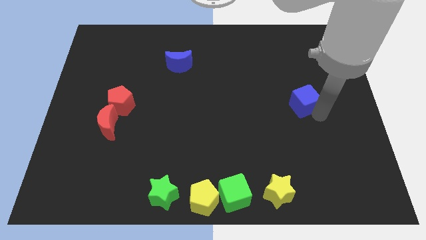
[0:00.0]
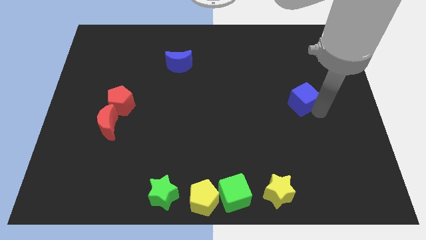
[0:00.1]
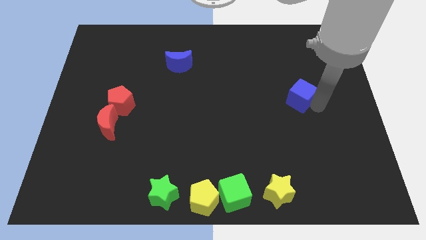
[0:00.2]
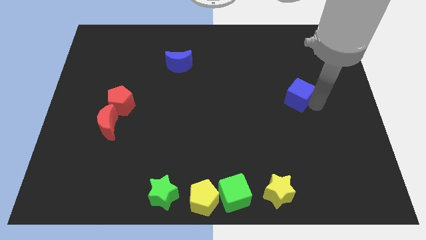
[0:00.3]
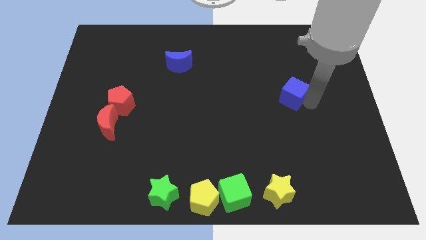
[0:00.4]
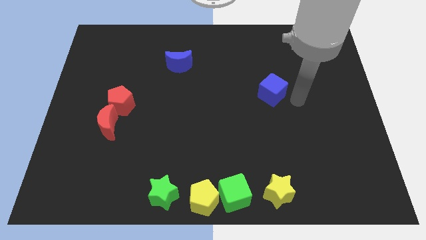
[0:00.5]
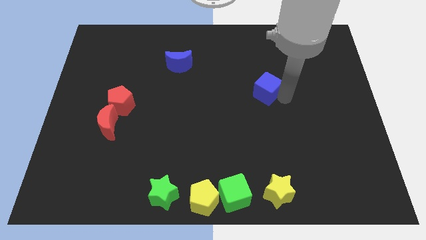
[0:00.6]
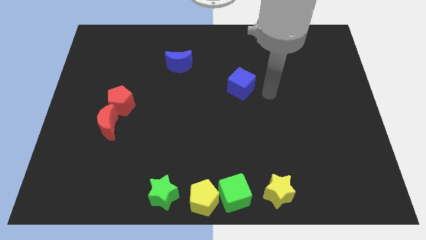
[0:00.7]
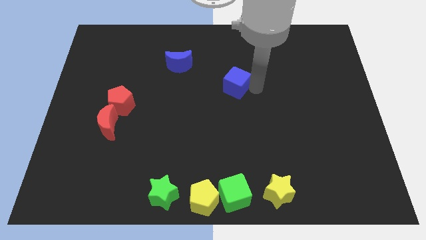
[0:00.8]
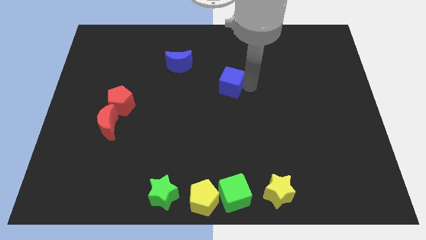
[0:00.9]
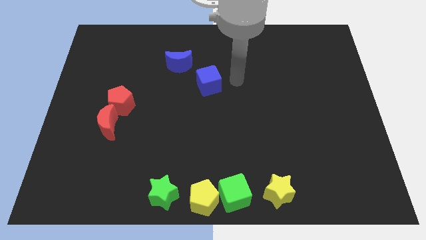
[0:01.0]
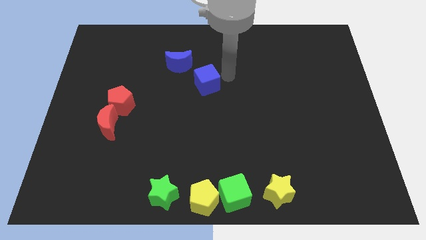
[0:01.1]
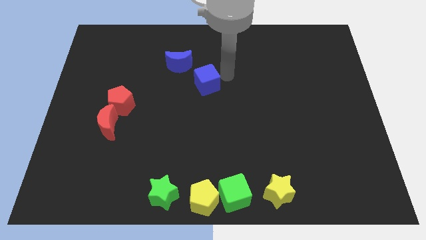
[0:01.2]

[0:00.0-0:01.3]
move the blue cube close to the blue crescent

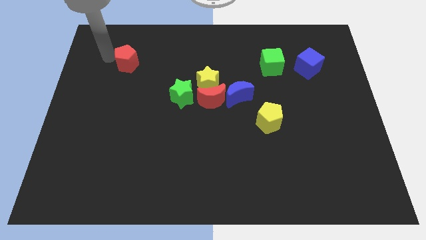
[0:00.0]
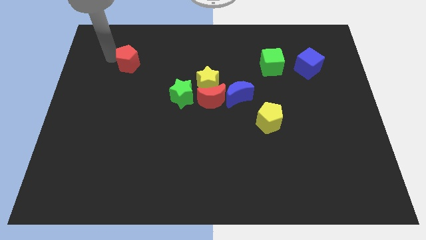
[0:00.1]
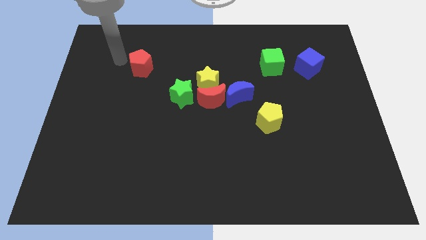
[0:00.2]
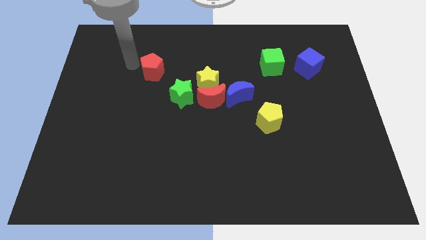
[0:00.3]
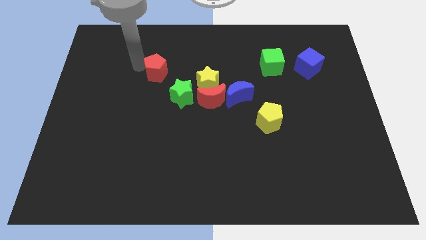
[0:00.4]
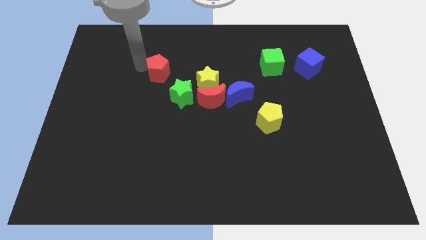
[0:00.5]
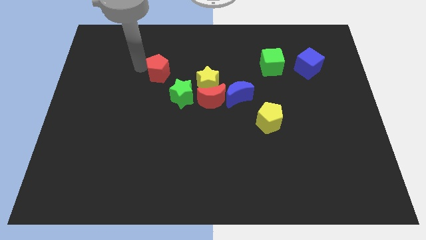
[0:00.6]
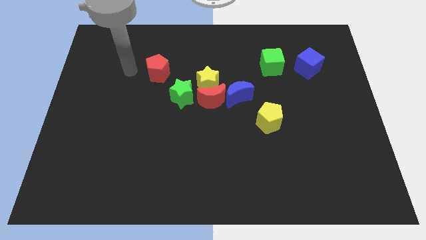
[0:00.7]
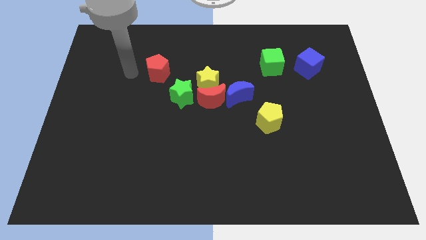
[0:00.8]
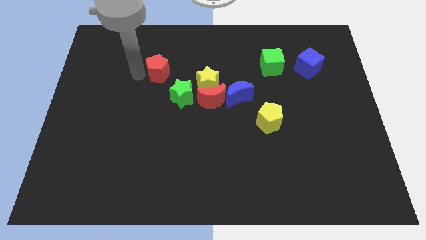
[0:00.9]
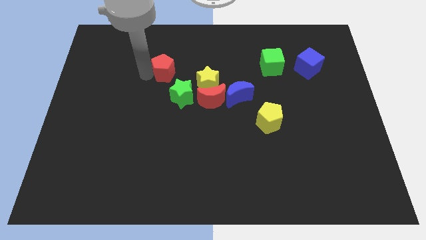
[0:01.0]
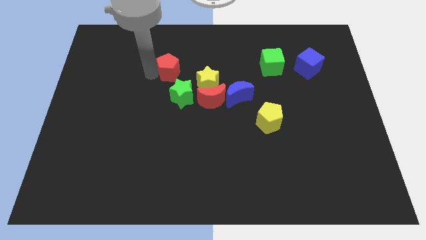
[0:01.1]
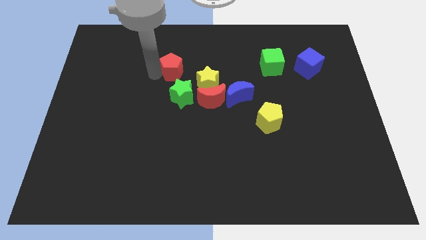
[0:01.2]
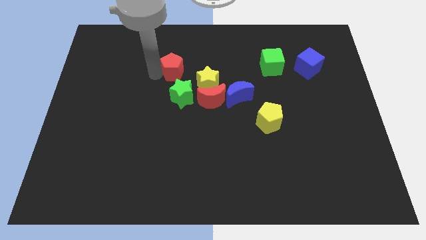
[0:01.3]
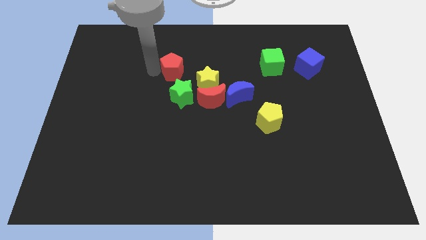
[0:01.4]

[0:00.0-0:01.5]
place the red pentagon above left to the green star

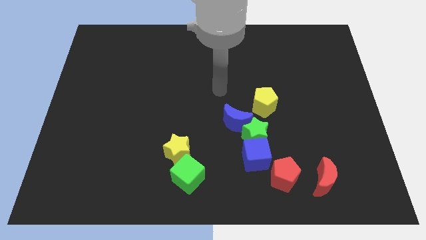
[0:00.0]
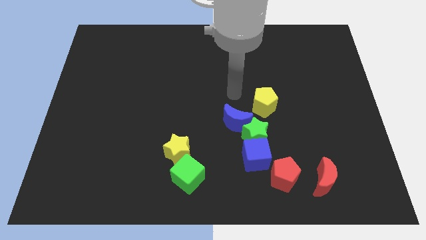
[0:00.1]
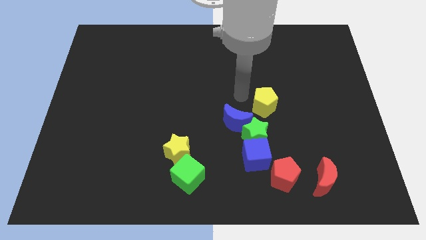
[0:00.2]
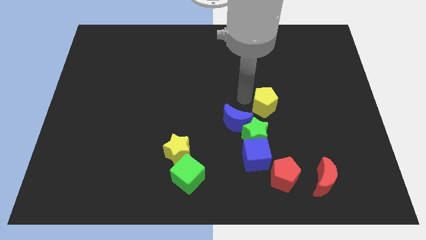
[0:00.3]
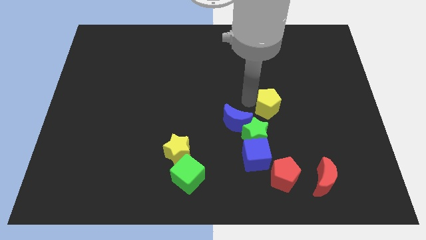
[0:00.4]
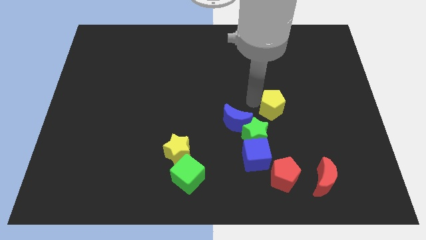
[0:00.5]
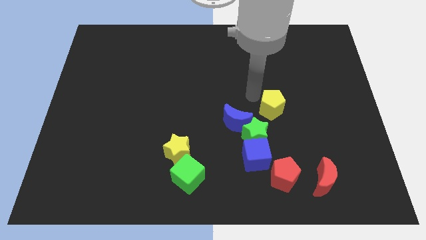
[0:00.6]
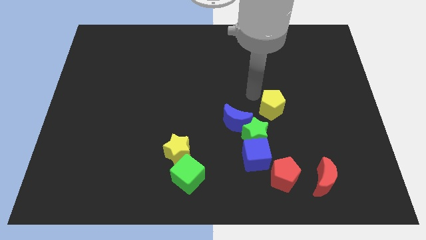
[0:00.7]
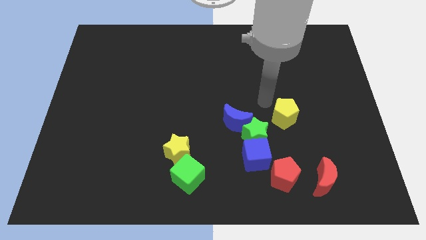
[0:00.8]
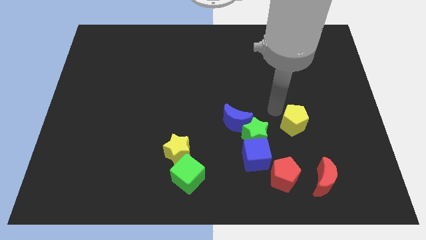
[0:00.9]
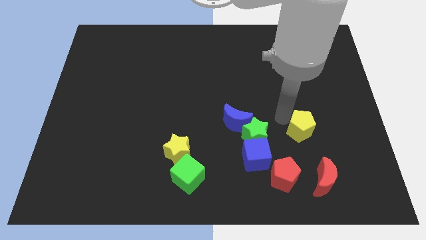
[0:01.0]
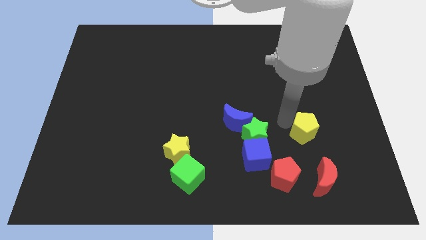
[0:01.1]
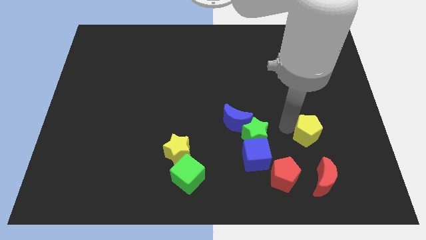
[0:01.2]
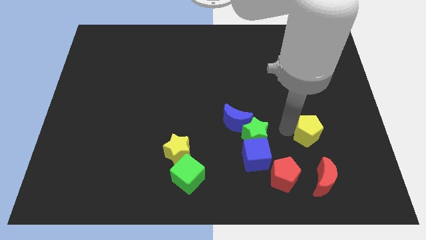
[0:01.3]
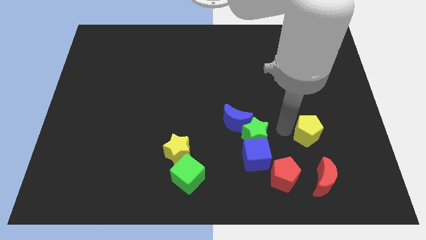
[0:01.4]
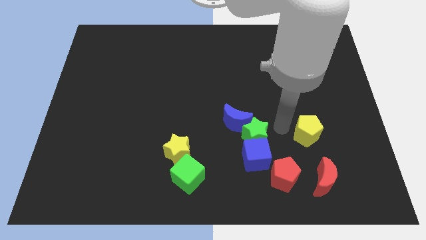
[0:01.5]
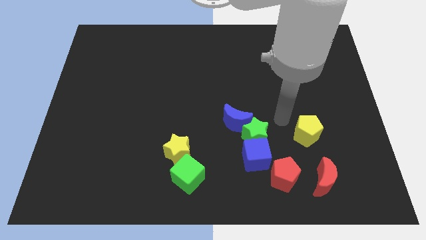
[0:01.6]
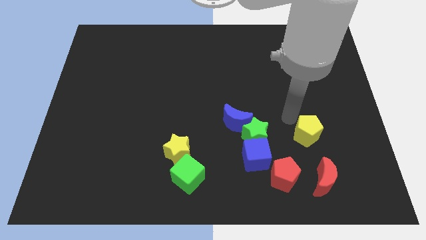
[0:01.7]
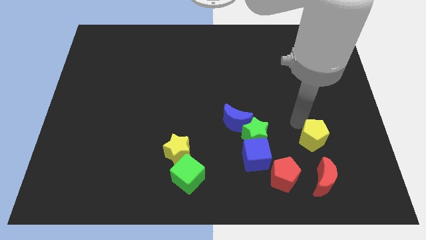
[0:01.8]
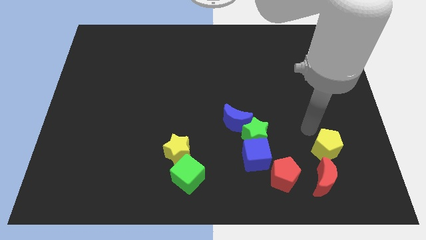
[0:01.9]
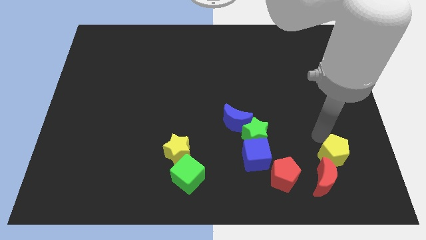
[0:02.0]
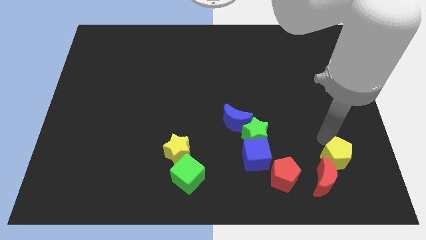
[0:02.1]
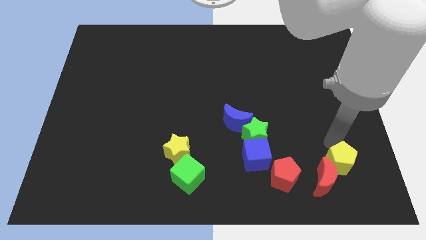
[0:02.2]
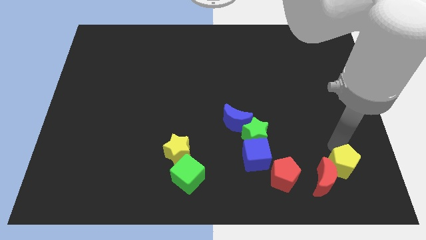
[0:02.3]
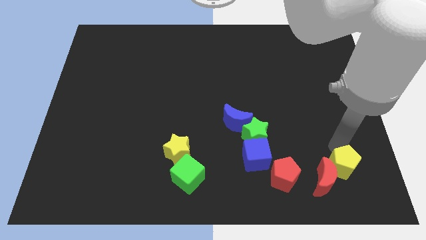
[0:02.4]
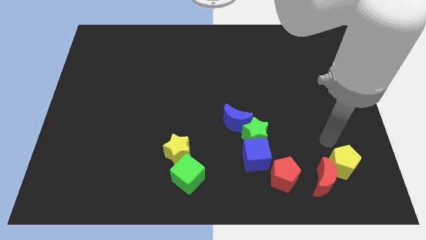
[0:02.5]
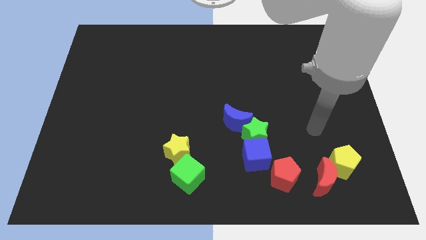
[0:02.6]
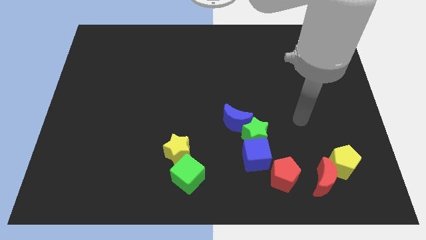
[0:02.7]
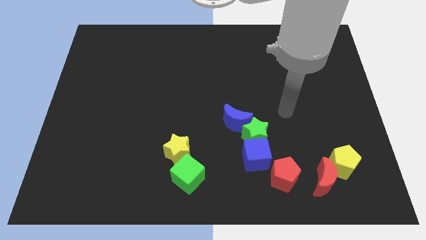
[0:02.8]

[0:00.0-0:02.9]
push the yellow pentagon to the red crescent

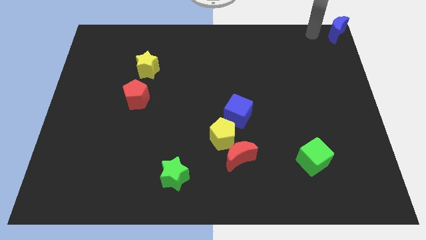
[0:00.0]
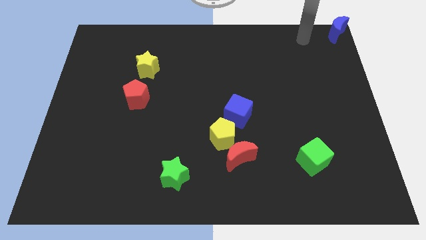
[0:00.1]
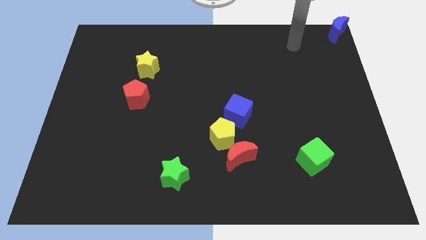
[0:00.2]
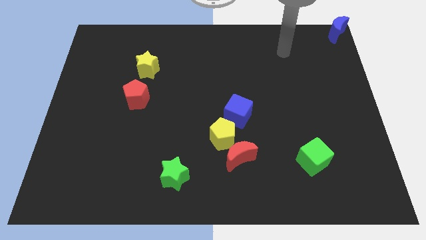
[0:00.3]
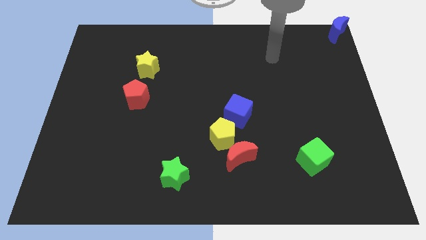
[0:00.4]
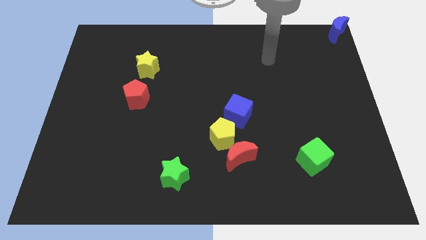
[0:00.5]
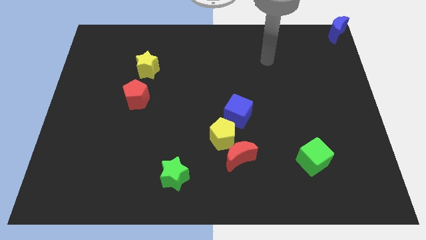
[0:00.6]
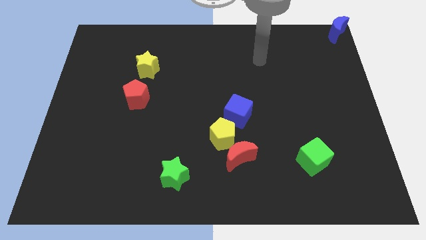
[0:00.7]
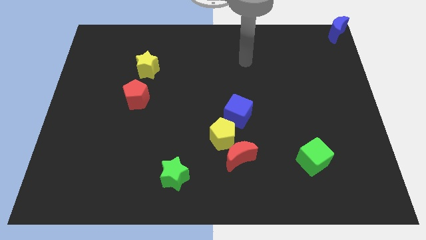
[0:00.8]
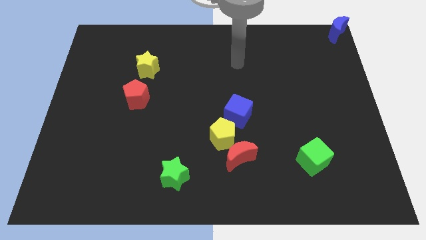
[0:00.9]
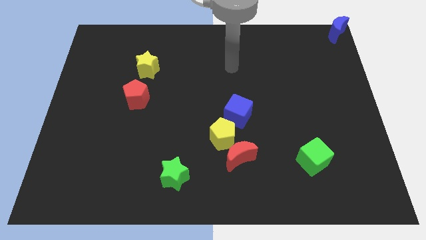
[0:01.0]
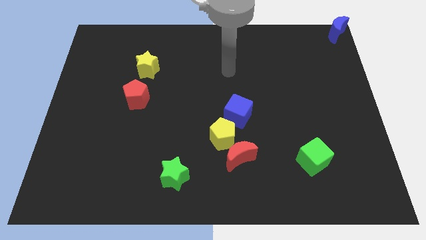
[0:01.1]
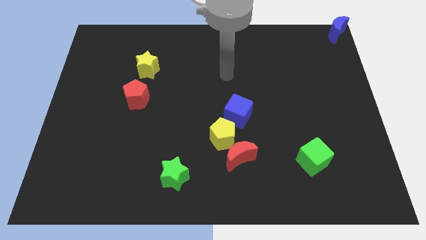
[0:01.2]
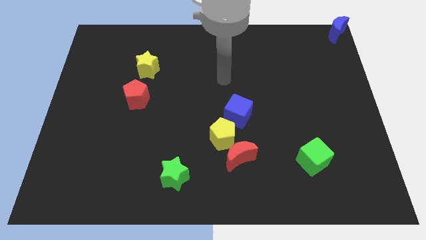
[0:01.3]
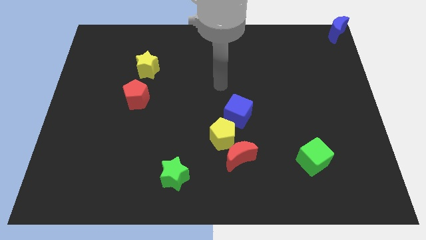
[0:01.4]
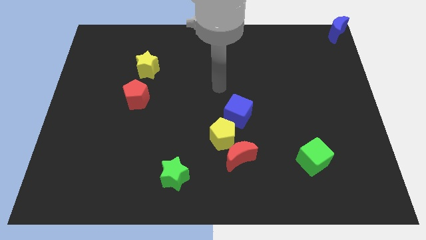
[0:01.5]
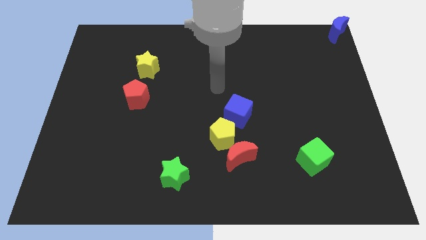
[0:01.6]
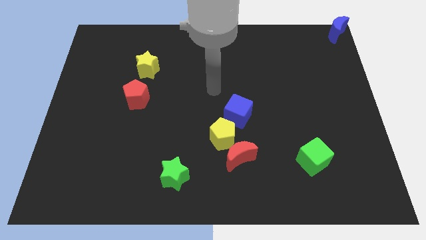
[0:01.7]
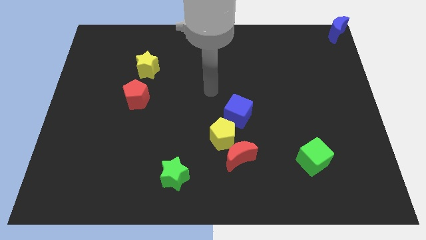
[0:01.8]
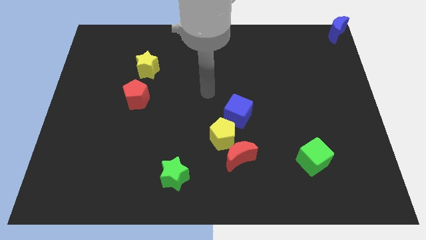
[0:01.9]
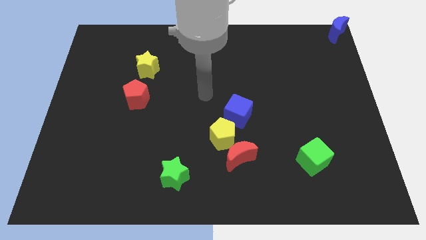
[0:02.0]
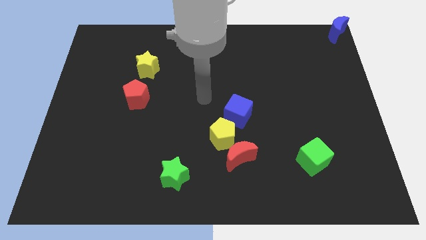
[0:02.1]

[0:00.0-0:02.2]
place your arm at the center of the board

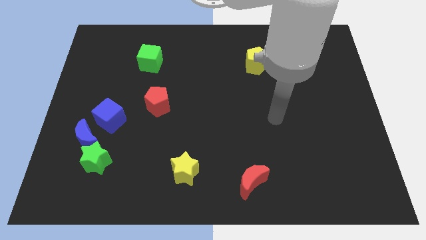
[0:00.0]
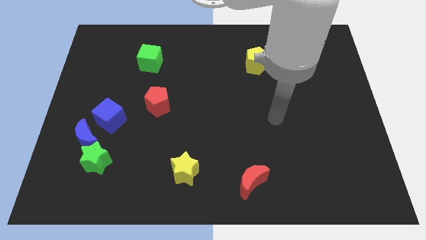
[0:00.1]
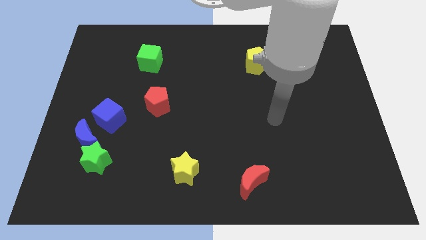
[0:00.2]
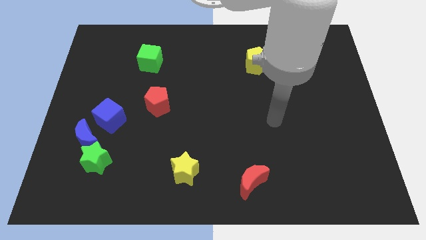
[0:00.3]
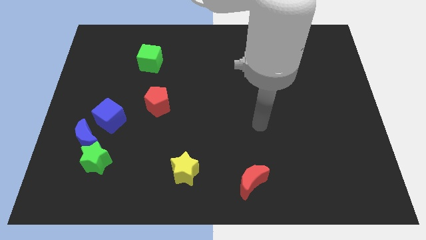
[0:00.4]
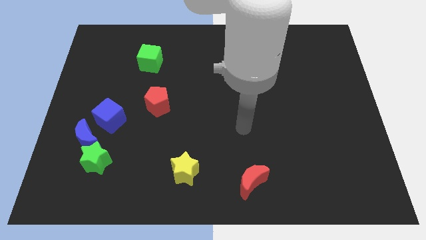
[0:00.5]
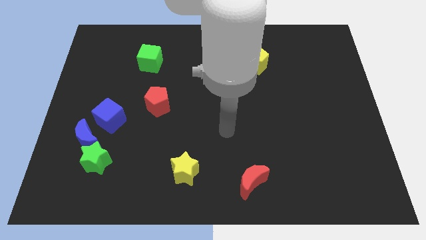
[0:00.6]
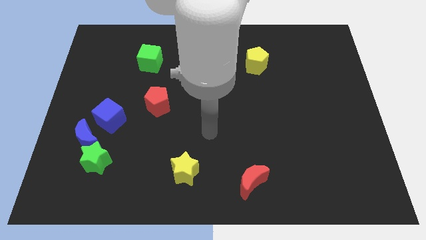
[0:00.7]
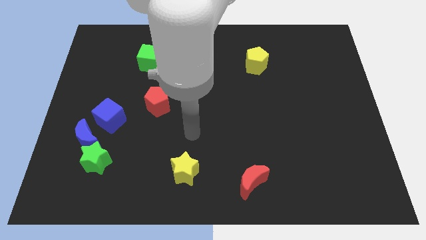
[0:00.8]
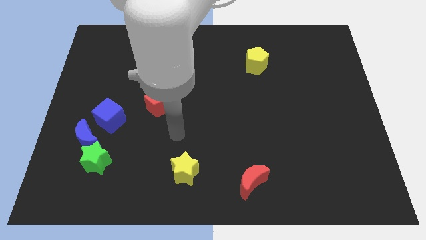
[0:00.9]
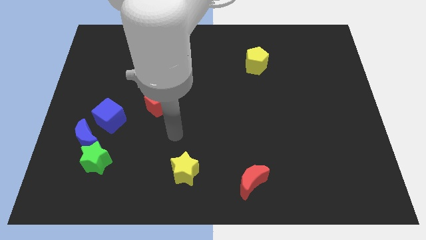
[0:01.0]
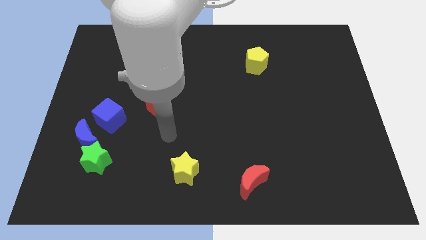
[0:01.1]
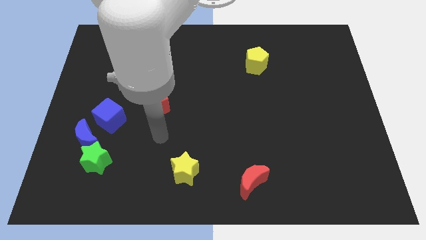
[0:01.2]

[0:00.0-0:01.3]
point your hand below the red pentagon
